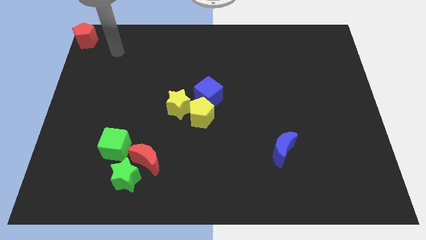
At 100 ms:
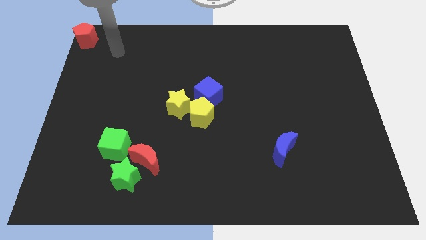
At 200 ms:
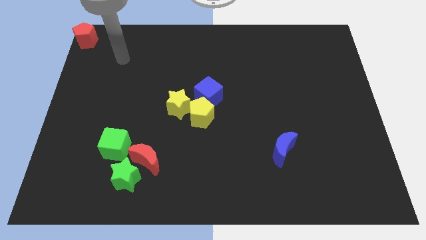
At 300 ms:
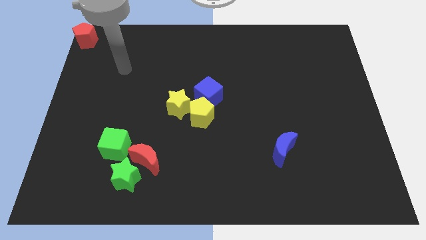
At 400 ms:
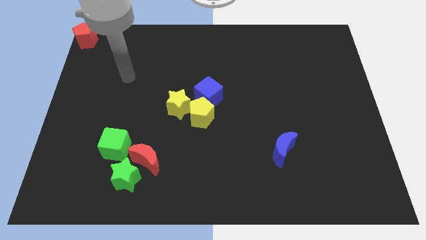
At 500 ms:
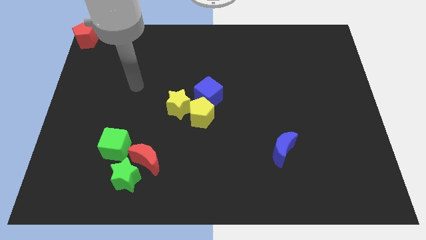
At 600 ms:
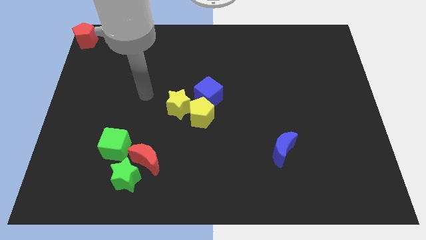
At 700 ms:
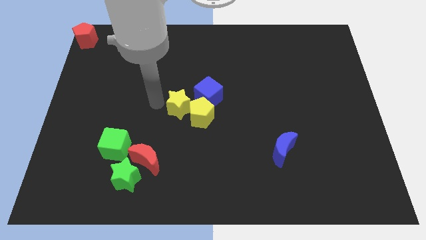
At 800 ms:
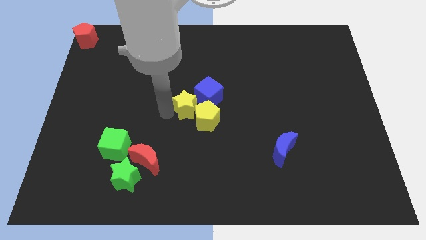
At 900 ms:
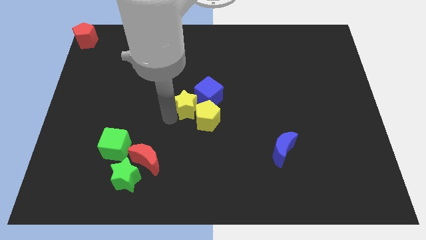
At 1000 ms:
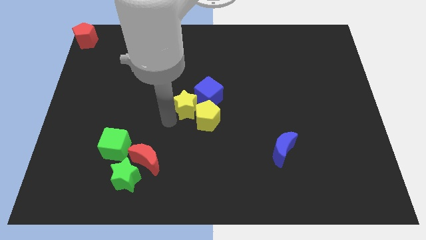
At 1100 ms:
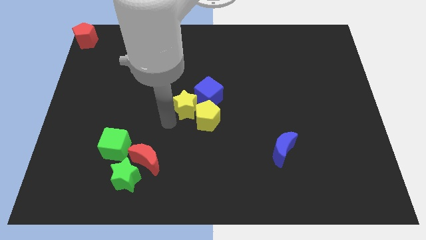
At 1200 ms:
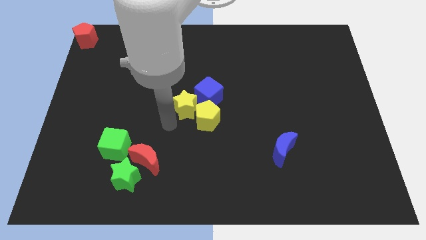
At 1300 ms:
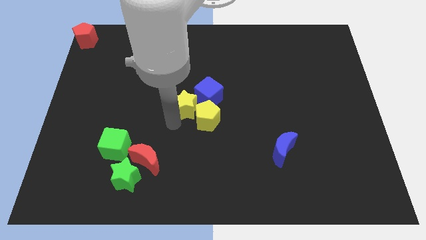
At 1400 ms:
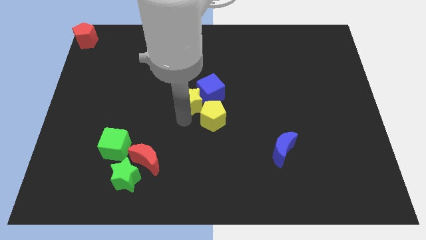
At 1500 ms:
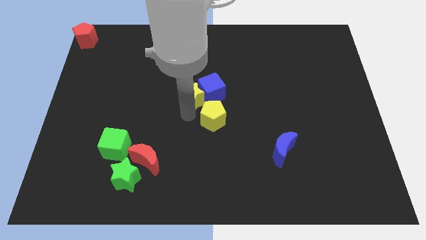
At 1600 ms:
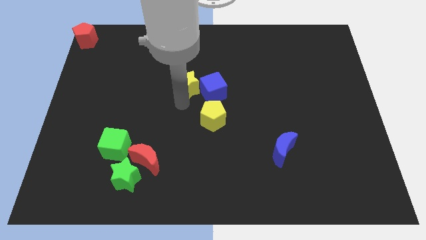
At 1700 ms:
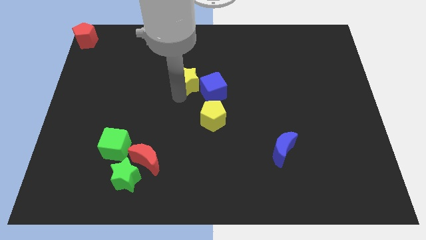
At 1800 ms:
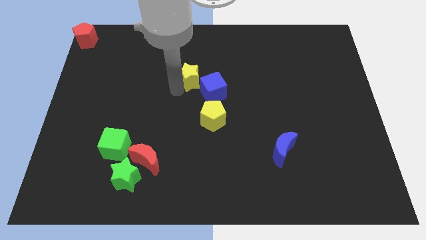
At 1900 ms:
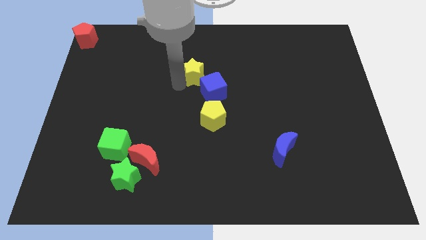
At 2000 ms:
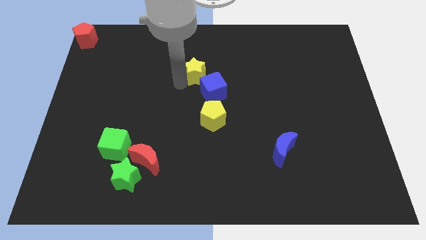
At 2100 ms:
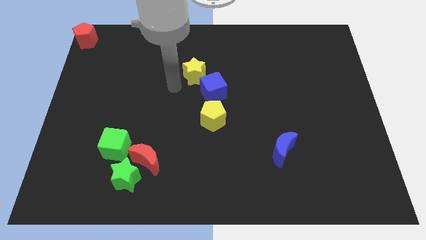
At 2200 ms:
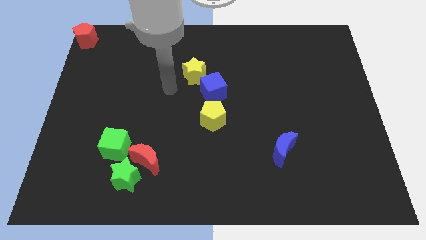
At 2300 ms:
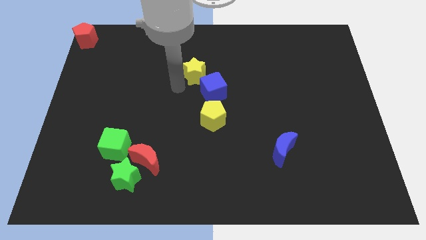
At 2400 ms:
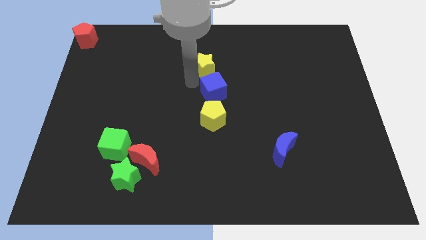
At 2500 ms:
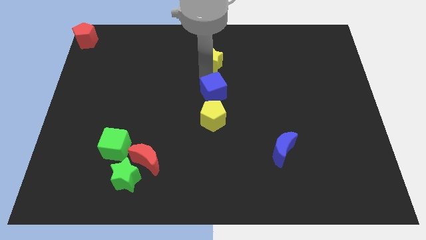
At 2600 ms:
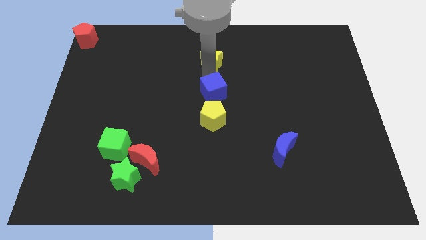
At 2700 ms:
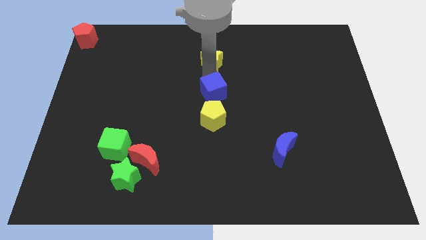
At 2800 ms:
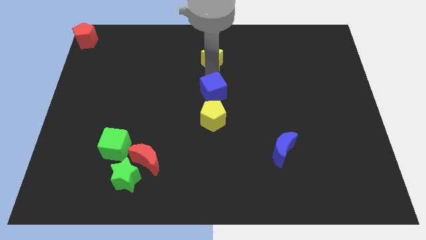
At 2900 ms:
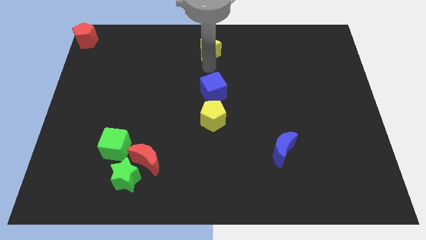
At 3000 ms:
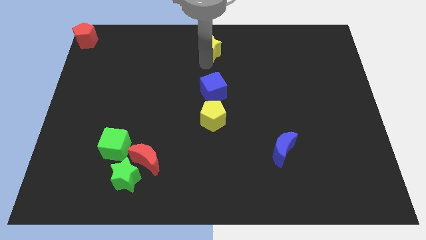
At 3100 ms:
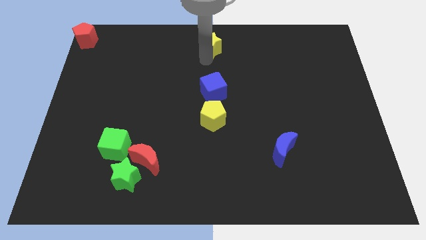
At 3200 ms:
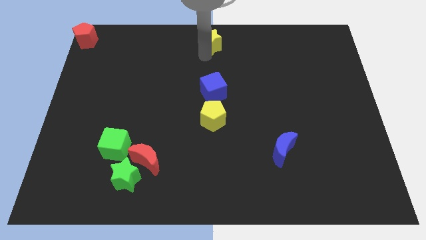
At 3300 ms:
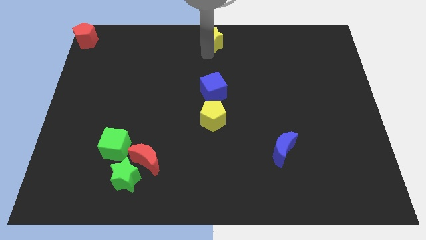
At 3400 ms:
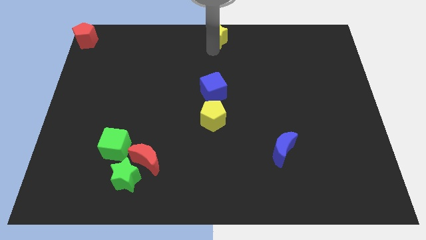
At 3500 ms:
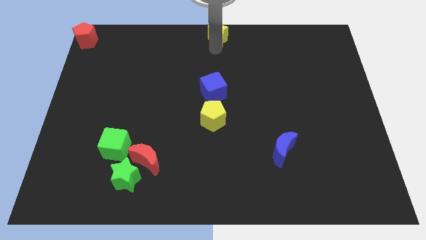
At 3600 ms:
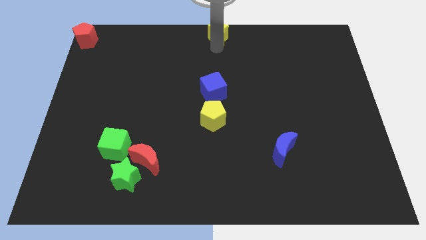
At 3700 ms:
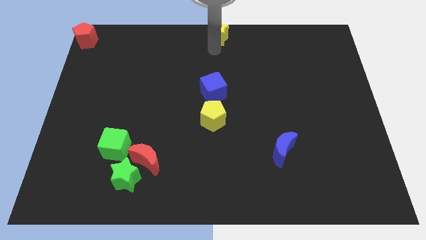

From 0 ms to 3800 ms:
push the yellow star to the top center of the board

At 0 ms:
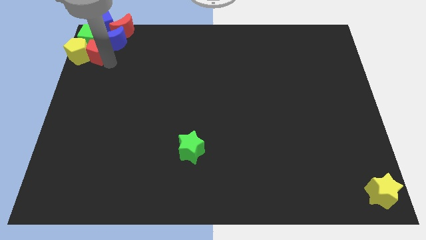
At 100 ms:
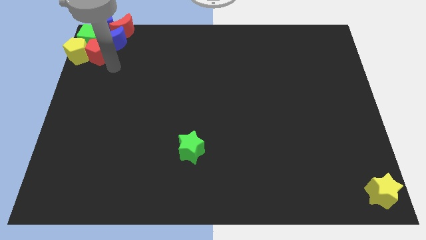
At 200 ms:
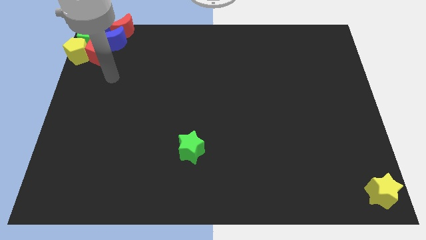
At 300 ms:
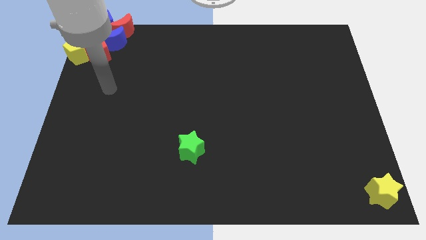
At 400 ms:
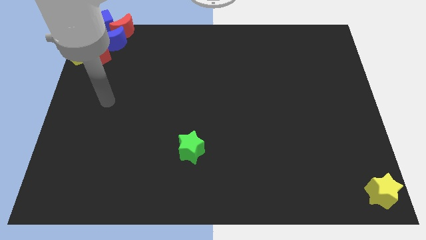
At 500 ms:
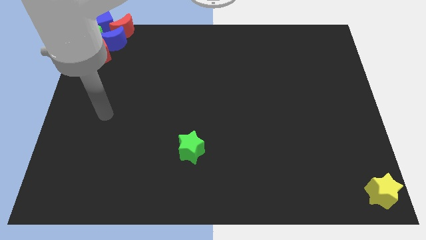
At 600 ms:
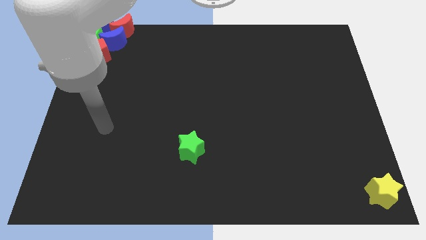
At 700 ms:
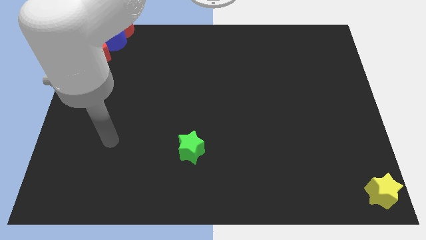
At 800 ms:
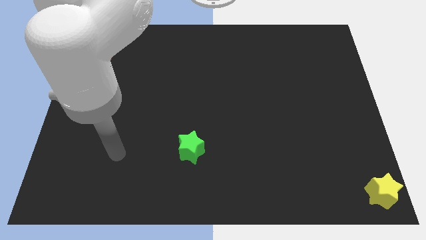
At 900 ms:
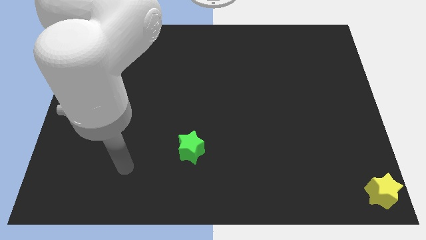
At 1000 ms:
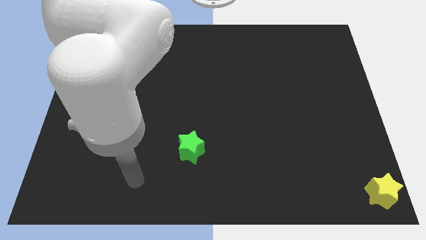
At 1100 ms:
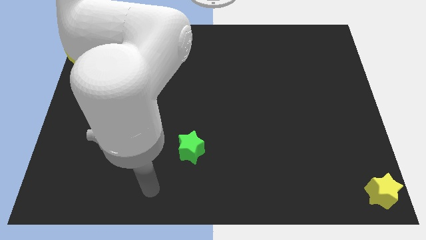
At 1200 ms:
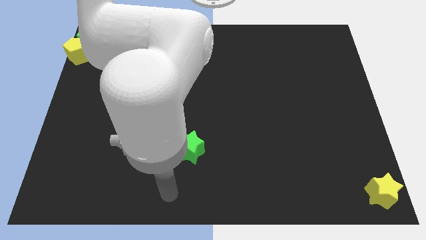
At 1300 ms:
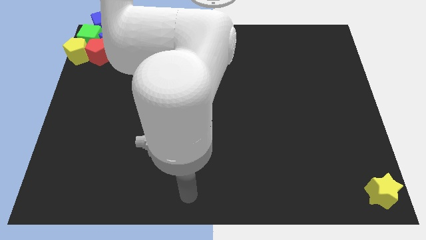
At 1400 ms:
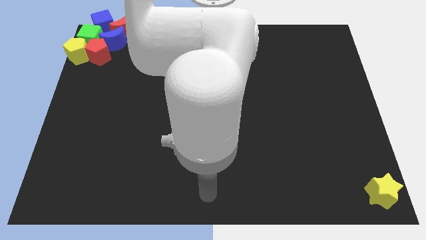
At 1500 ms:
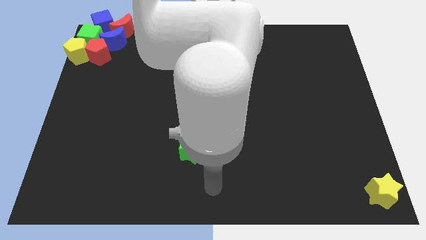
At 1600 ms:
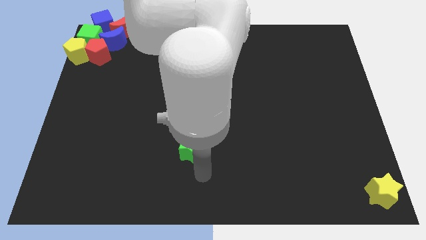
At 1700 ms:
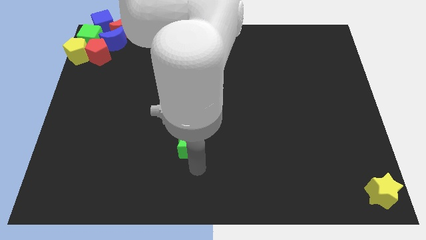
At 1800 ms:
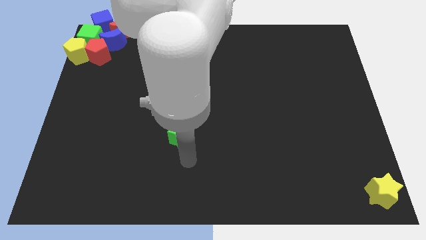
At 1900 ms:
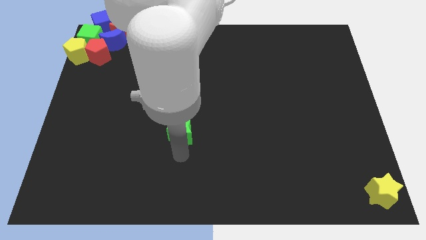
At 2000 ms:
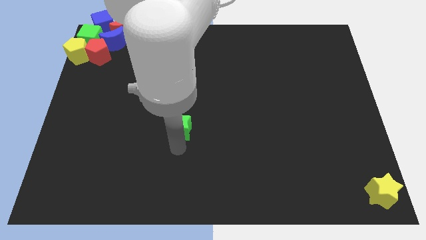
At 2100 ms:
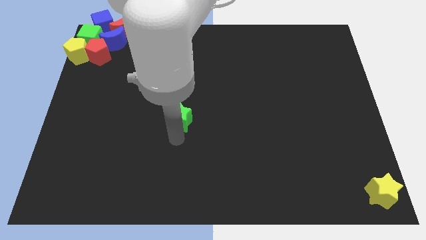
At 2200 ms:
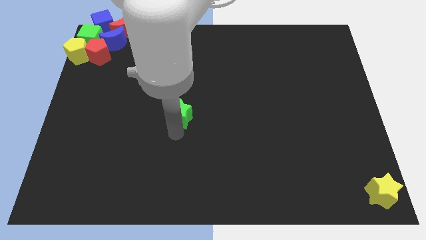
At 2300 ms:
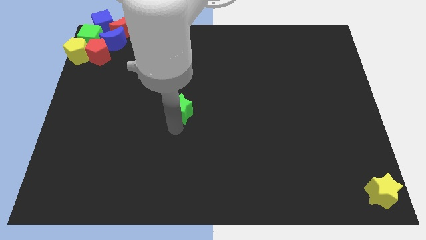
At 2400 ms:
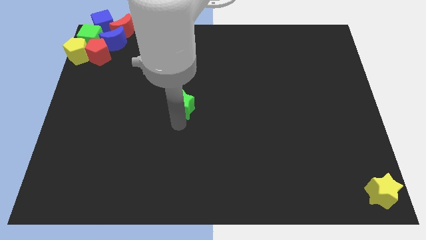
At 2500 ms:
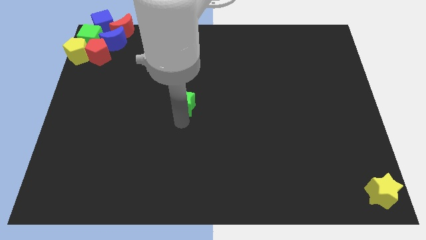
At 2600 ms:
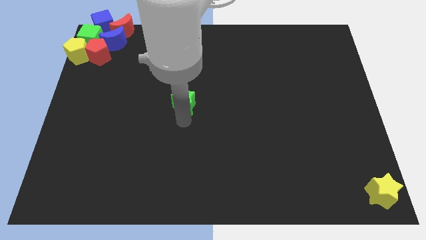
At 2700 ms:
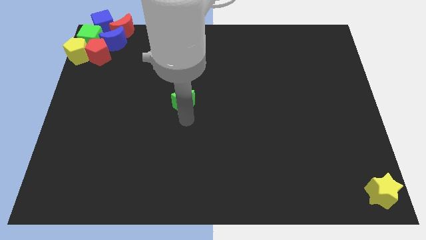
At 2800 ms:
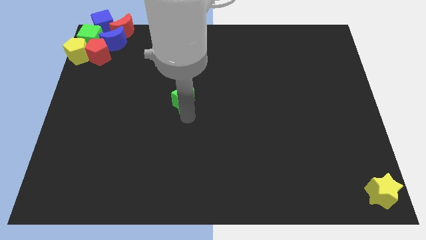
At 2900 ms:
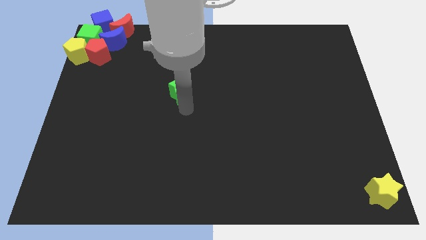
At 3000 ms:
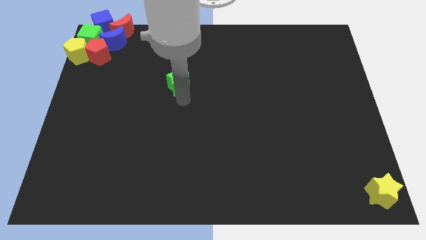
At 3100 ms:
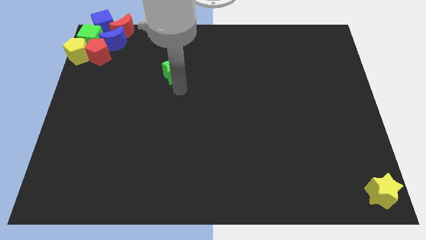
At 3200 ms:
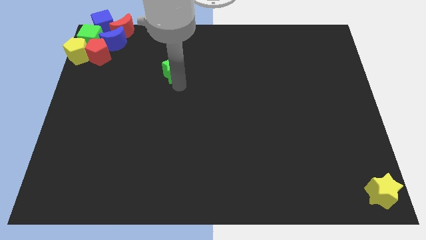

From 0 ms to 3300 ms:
place the green star to the middle of the board

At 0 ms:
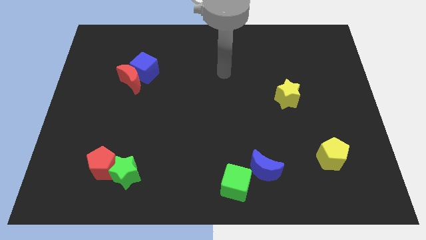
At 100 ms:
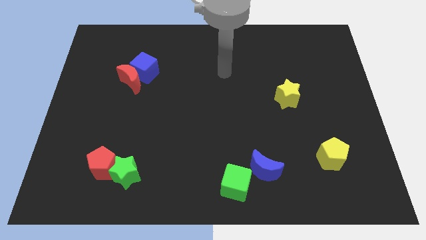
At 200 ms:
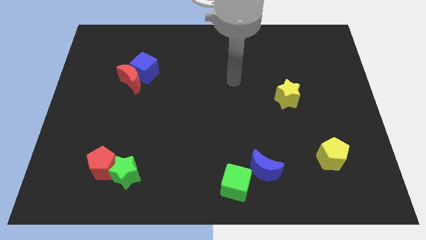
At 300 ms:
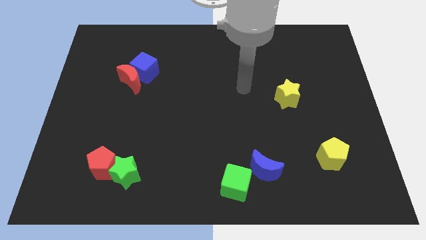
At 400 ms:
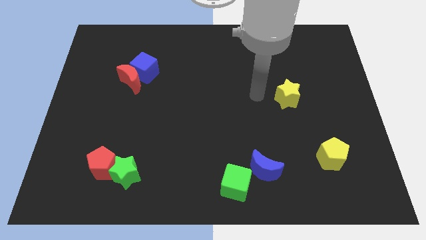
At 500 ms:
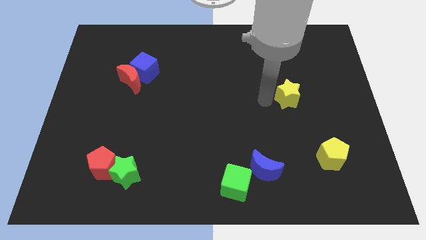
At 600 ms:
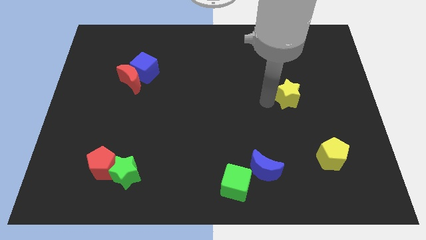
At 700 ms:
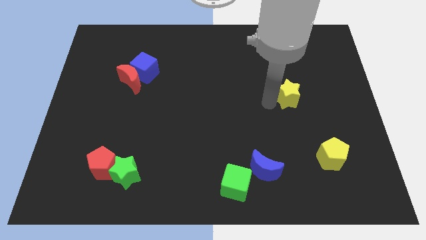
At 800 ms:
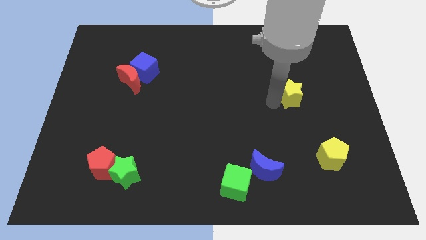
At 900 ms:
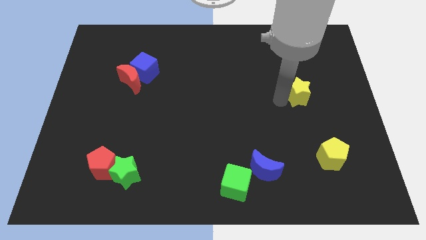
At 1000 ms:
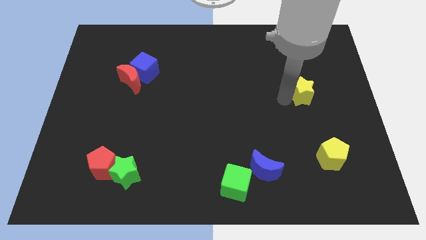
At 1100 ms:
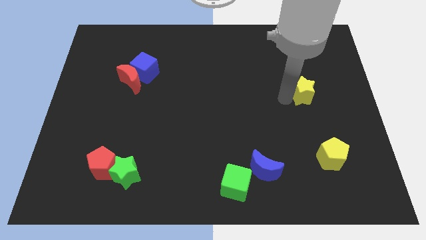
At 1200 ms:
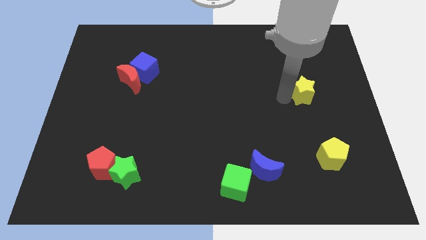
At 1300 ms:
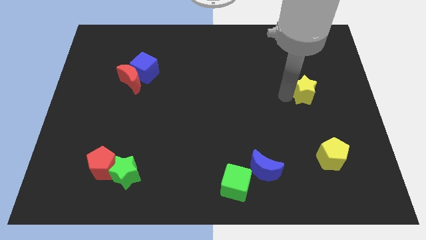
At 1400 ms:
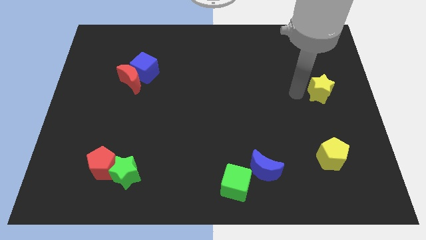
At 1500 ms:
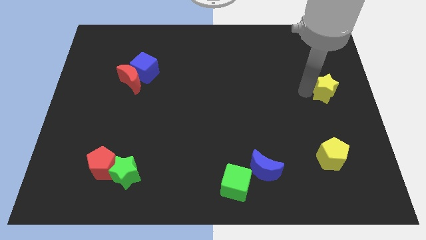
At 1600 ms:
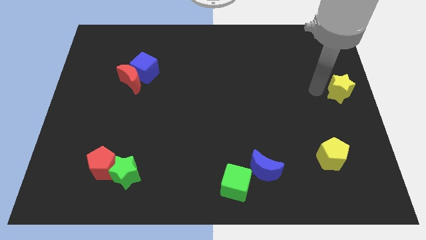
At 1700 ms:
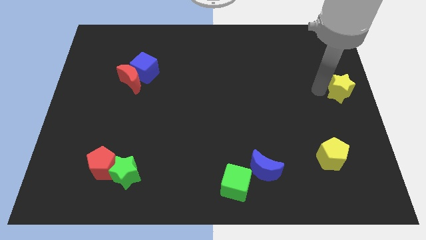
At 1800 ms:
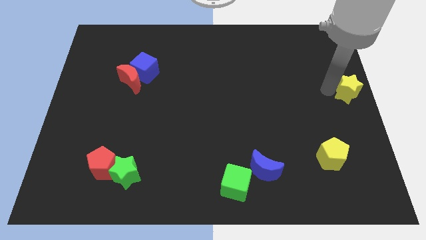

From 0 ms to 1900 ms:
move the yellow star to the right center
